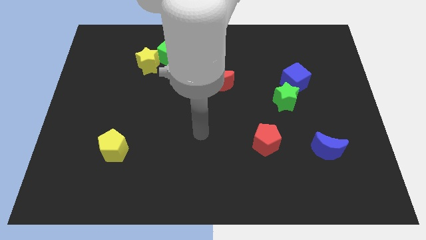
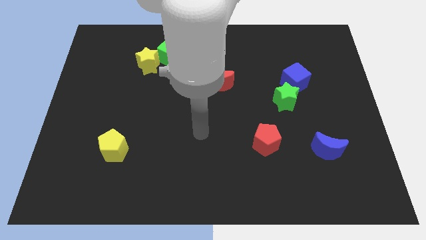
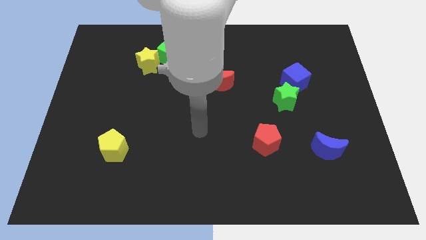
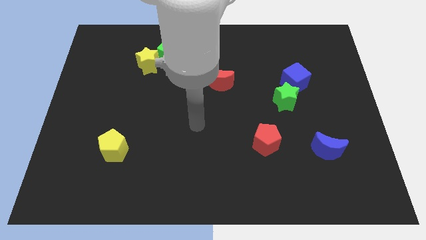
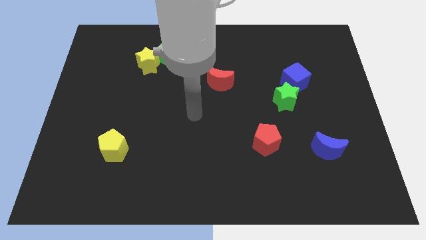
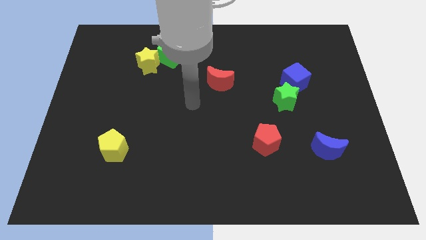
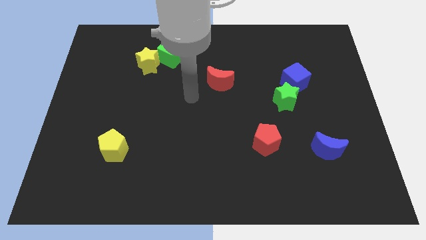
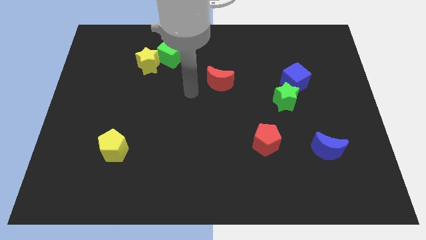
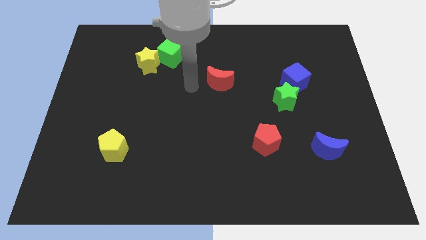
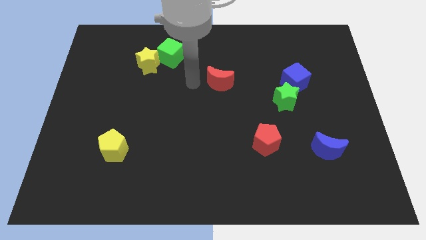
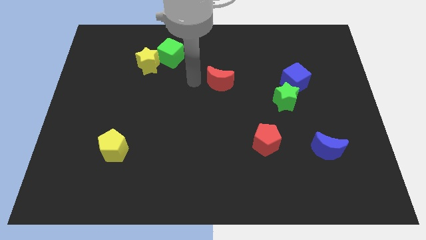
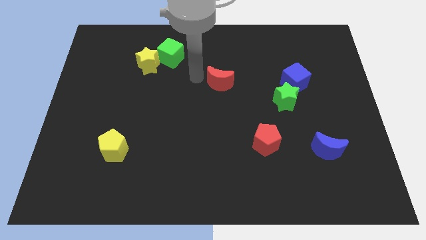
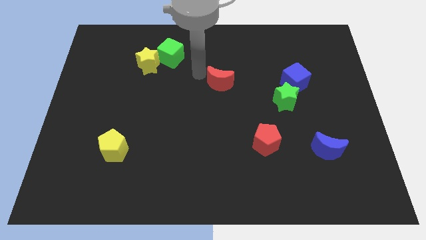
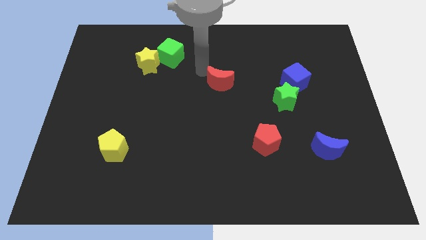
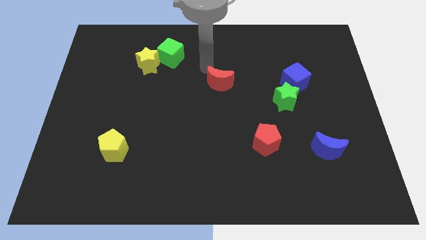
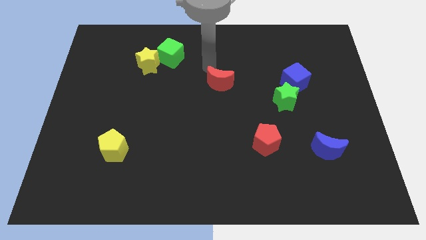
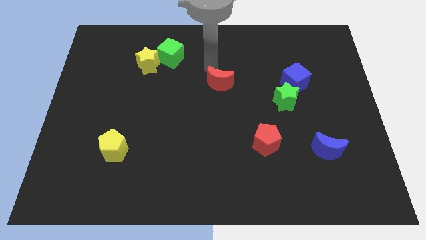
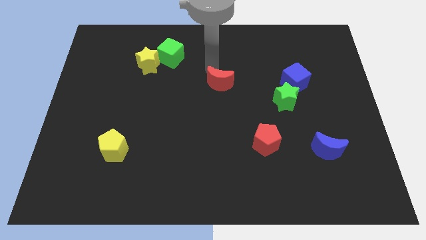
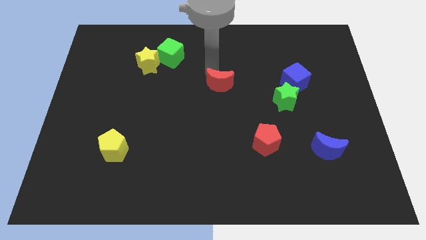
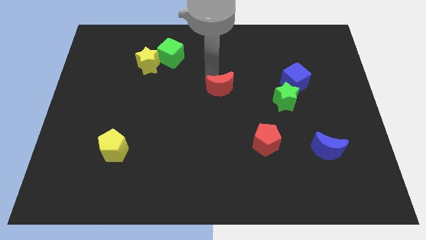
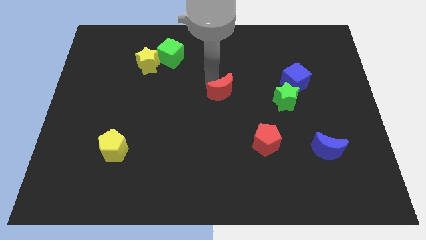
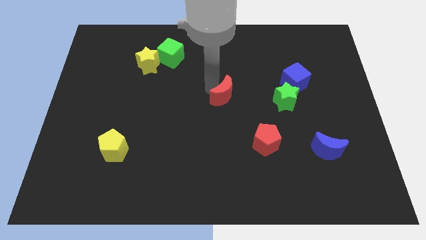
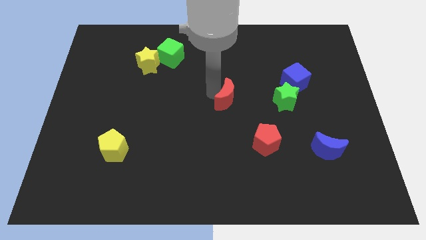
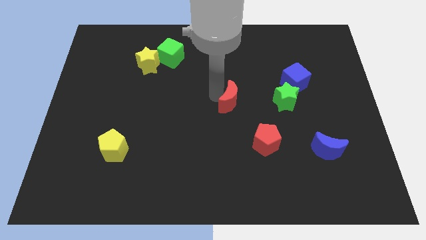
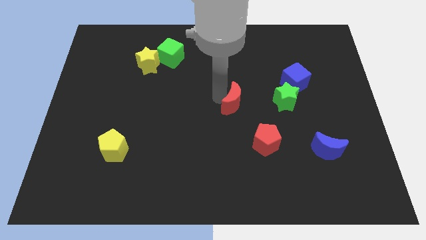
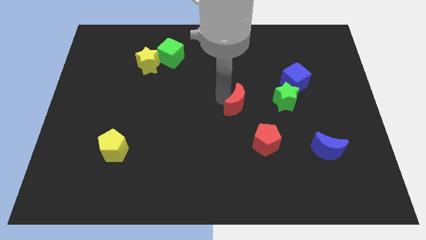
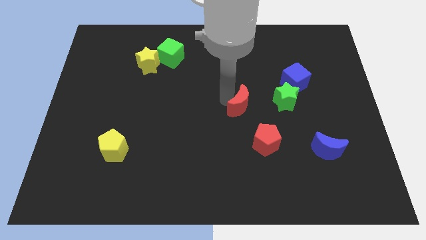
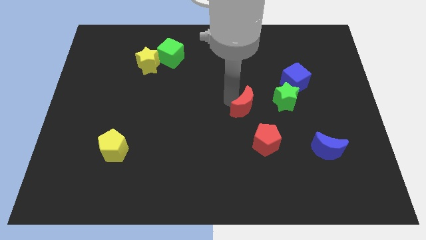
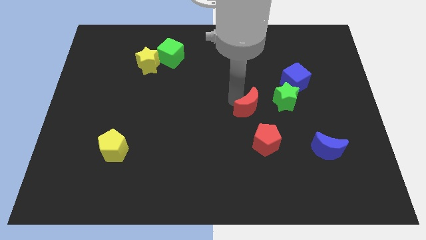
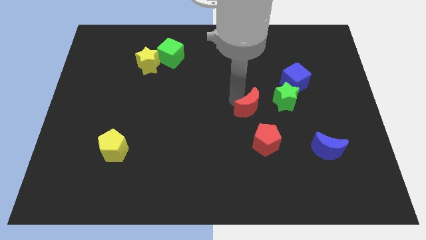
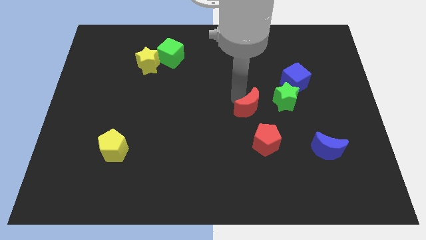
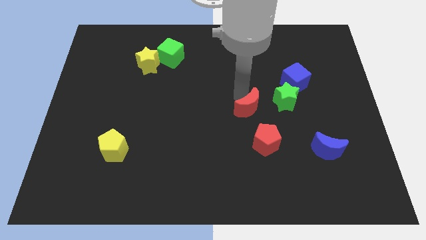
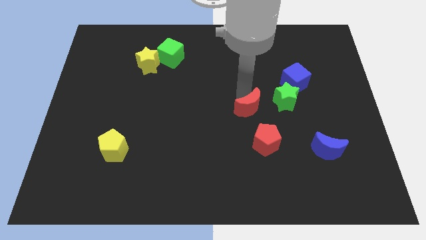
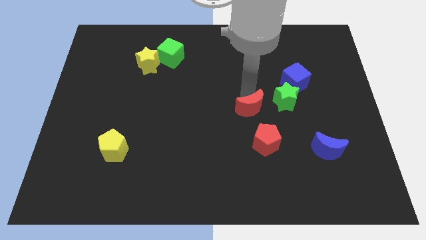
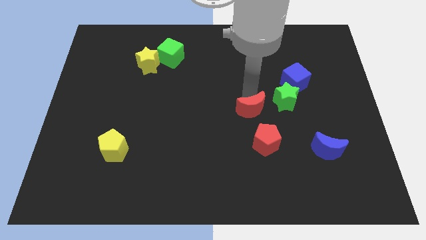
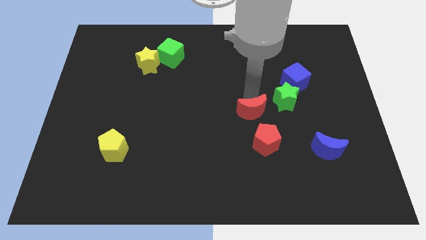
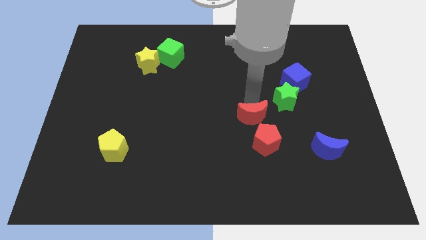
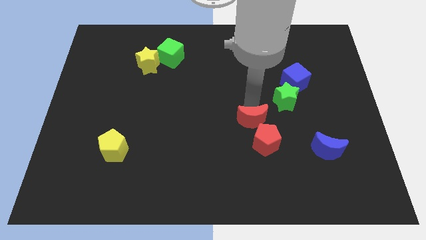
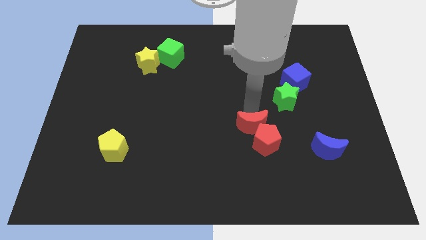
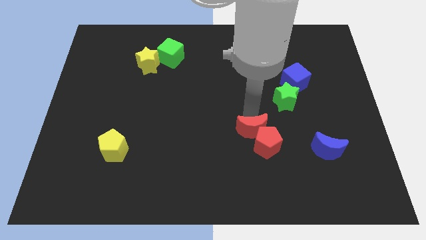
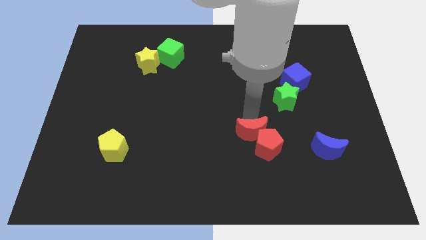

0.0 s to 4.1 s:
put the red moon to the red pentagon

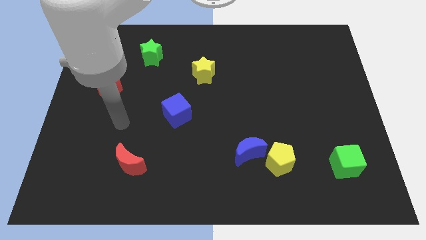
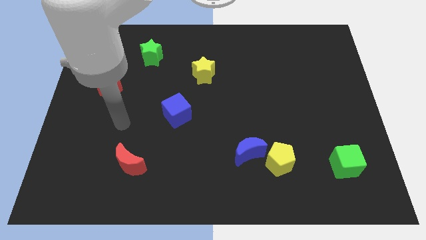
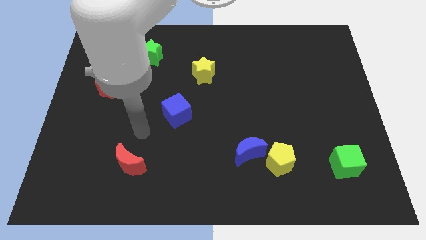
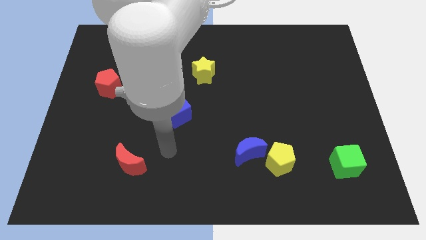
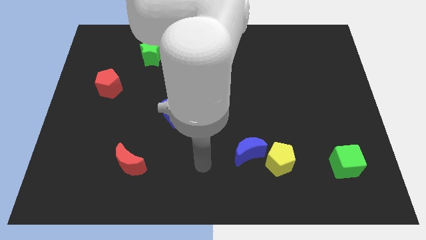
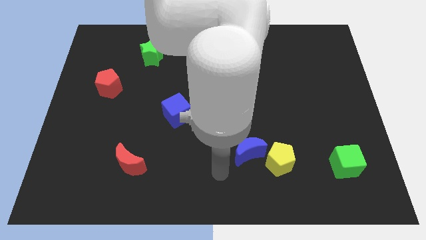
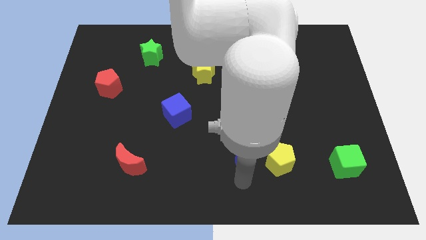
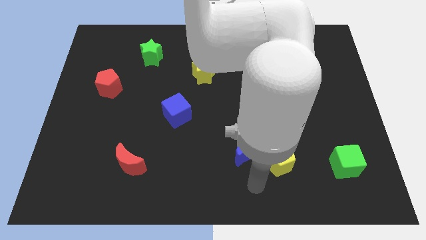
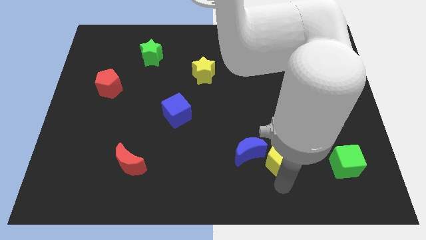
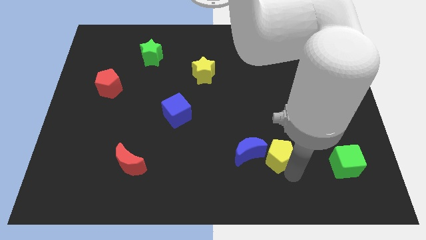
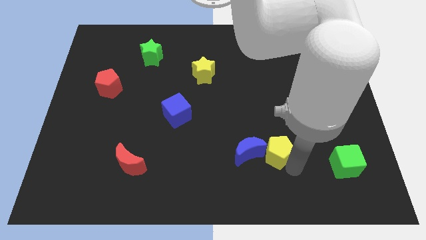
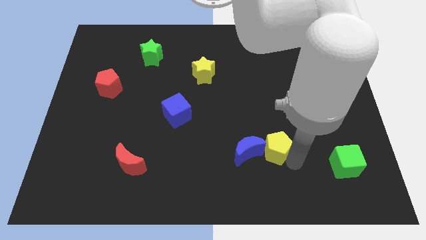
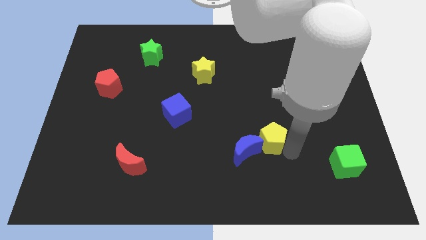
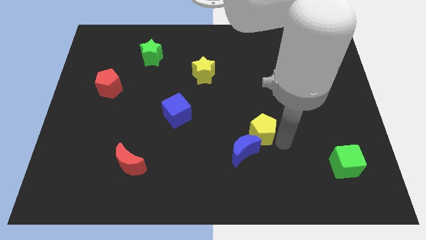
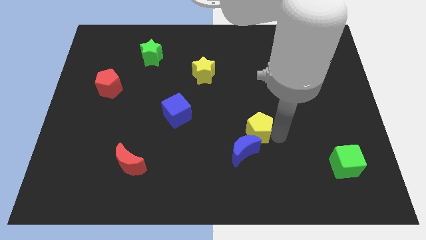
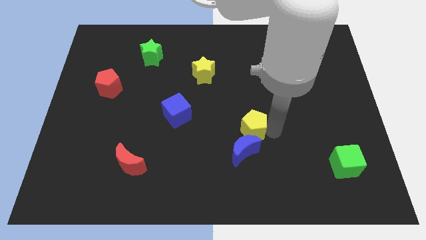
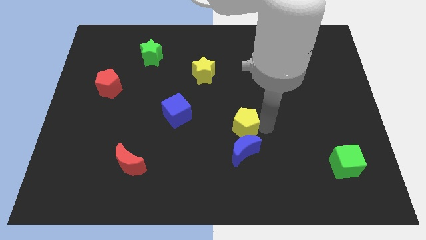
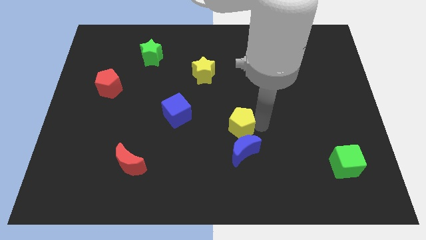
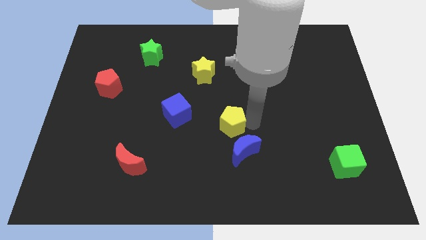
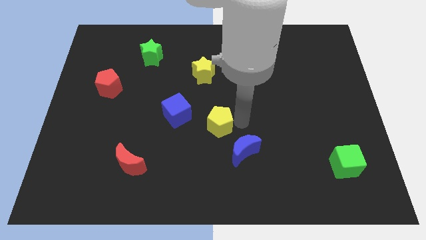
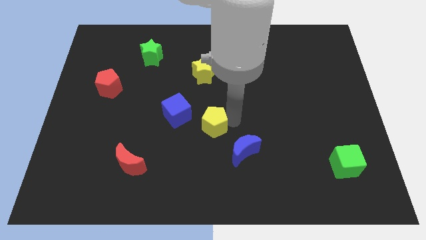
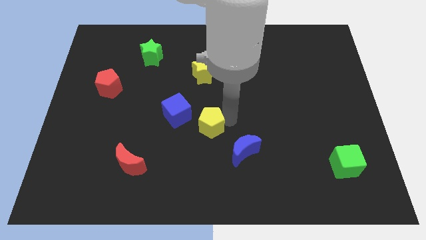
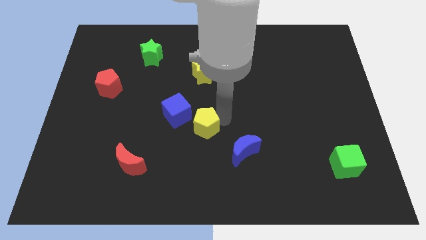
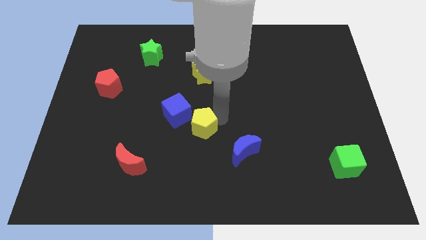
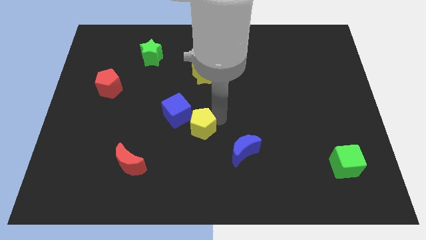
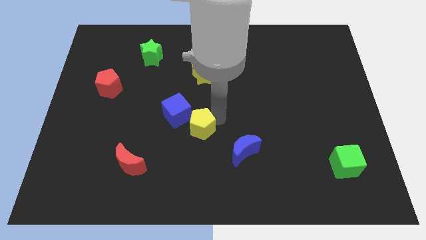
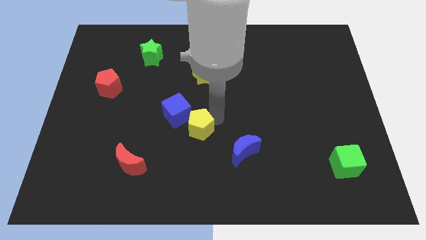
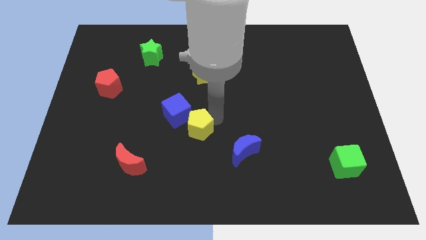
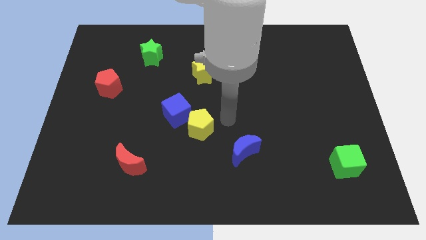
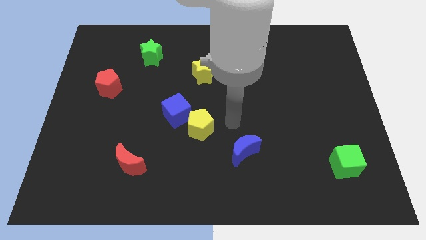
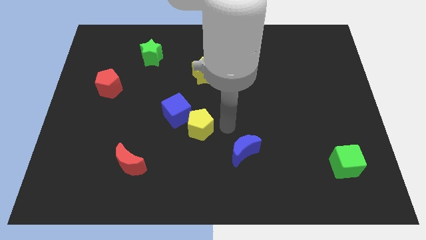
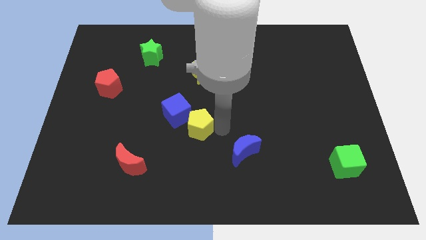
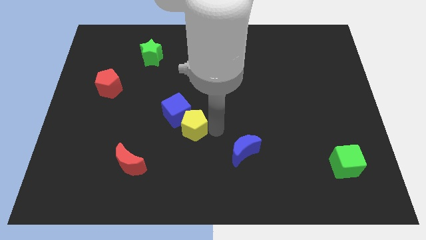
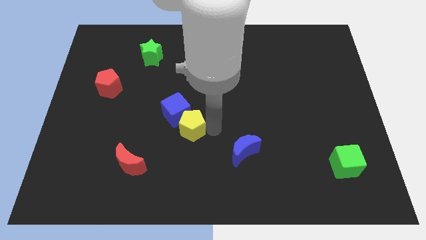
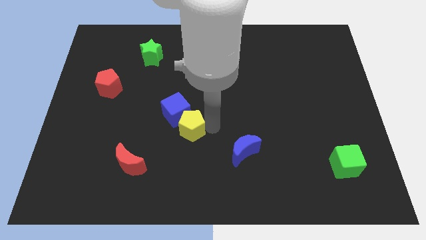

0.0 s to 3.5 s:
move the yellow pentagon next to the blue cube

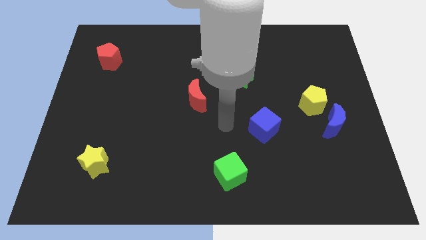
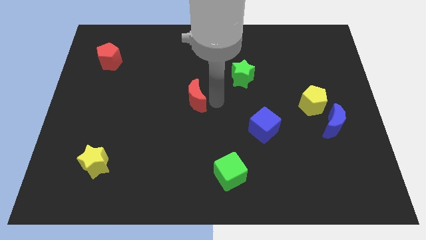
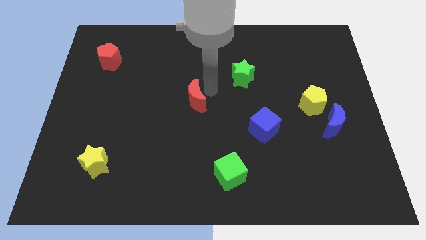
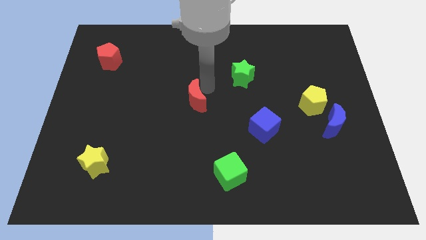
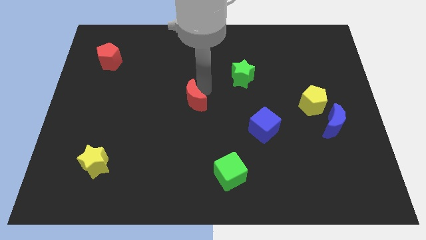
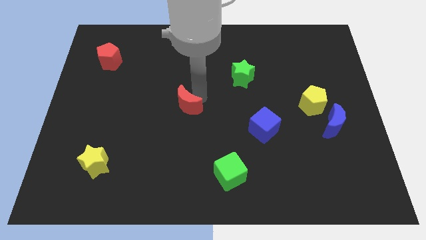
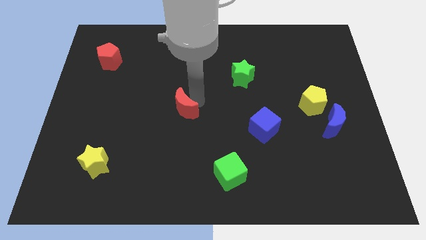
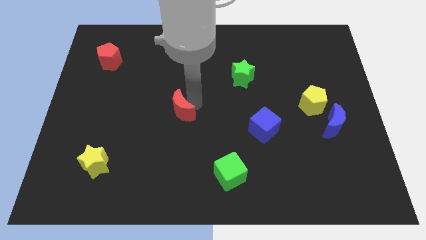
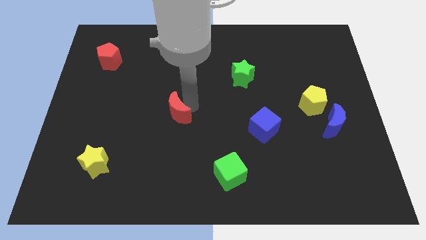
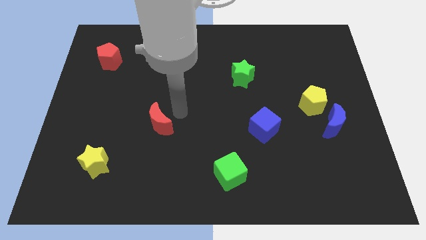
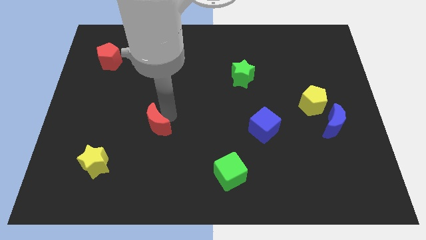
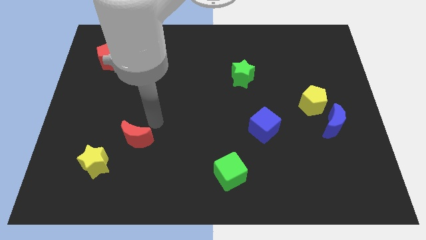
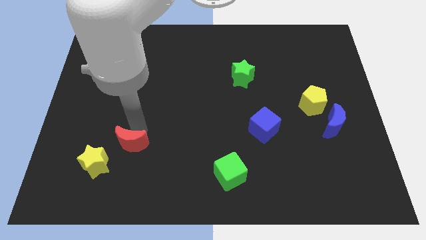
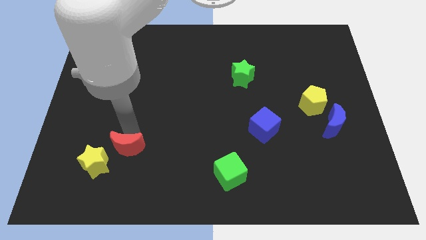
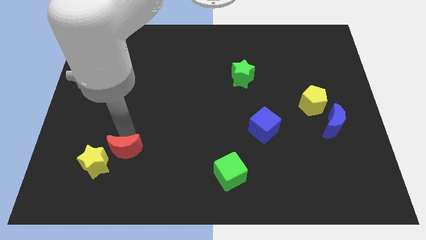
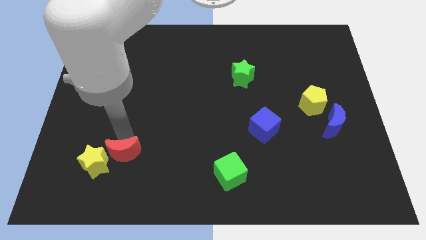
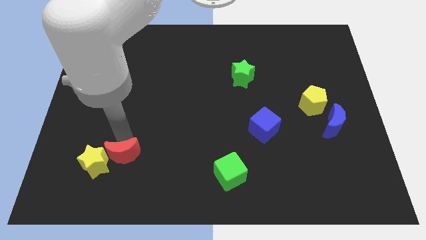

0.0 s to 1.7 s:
put the red moon to the yellow star
